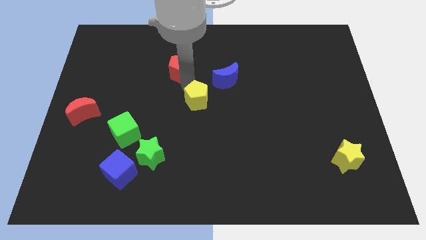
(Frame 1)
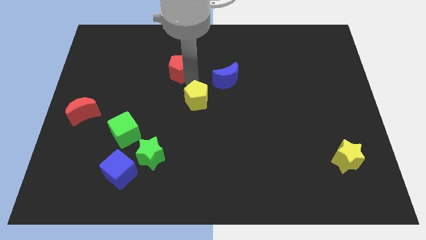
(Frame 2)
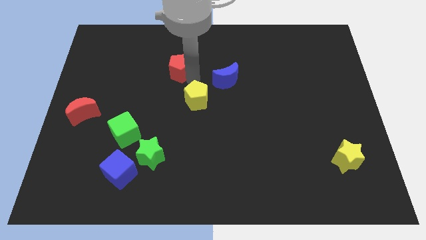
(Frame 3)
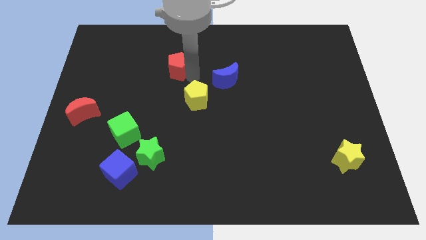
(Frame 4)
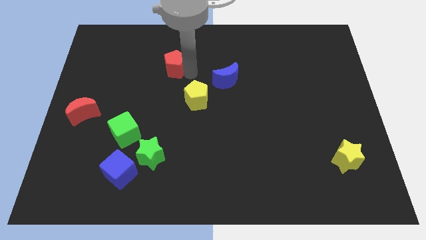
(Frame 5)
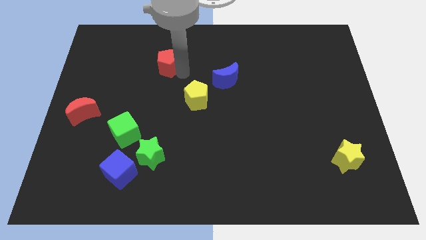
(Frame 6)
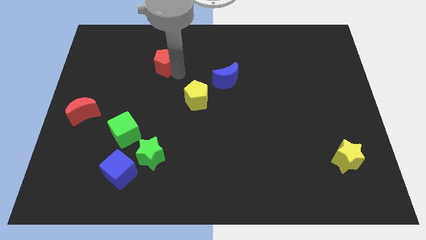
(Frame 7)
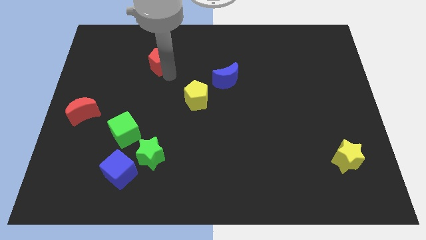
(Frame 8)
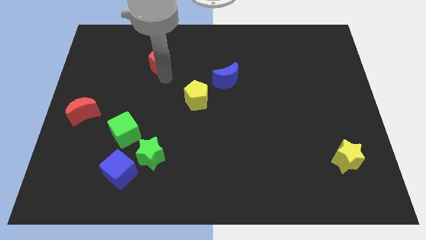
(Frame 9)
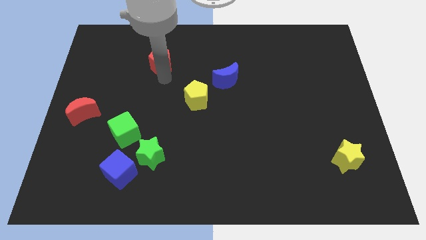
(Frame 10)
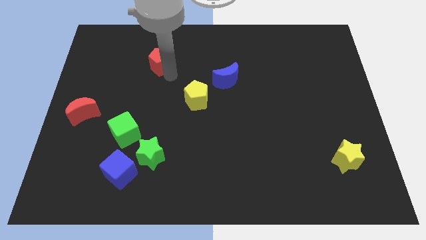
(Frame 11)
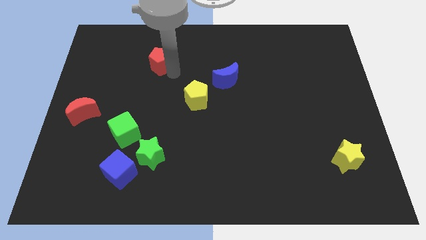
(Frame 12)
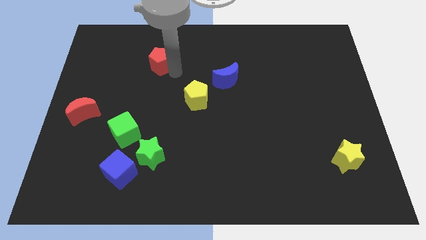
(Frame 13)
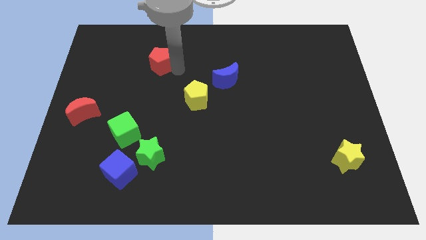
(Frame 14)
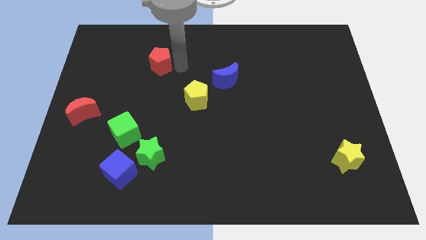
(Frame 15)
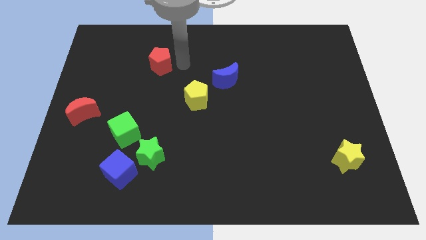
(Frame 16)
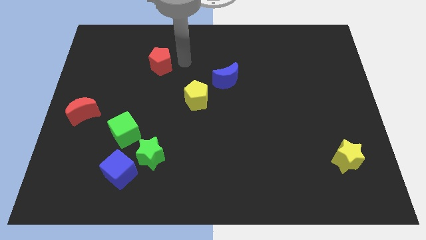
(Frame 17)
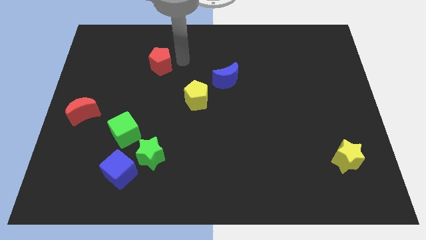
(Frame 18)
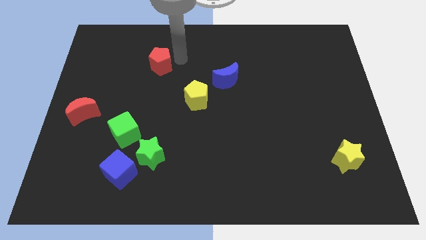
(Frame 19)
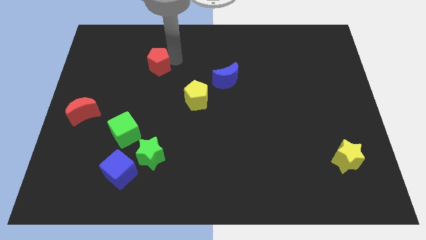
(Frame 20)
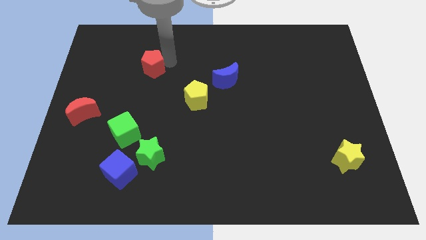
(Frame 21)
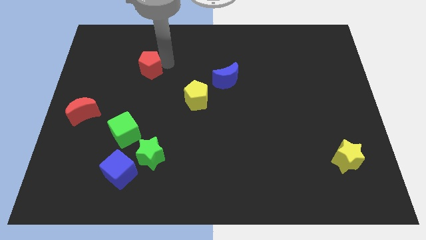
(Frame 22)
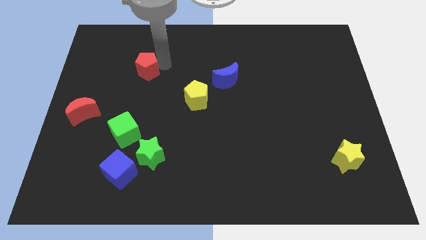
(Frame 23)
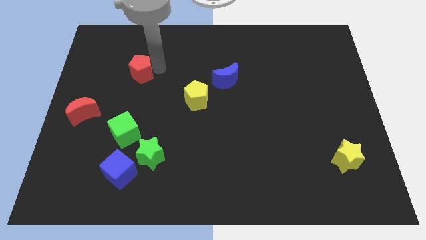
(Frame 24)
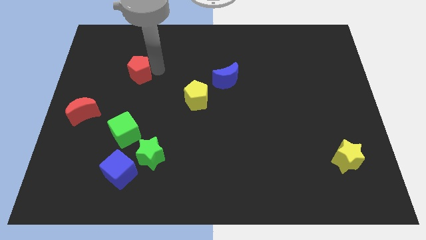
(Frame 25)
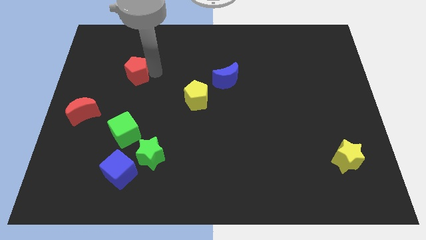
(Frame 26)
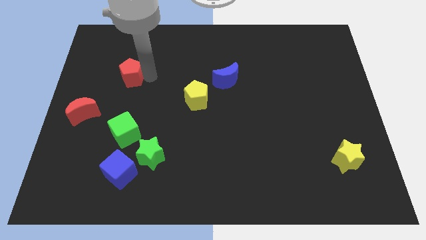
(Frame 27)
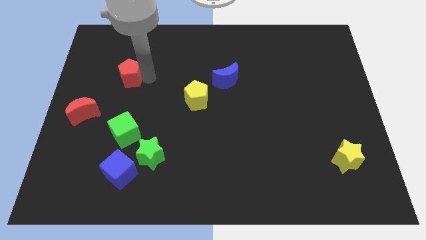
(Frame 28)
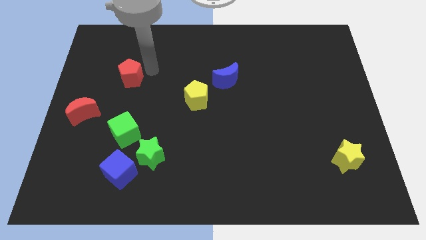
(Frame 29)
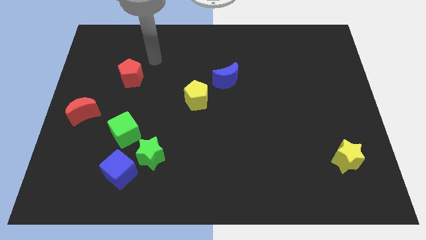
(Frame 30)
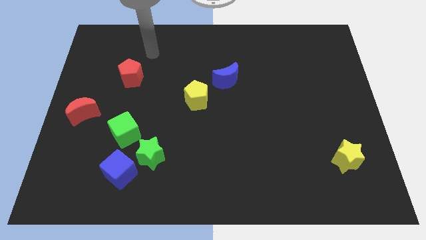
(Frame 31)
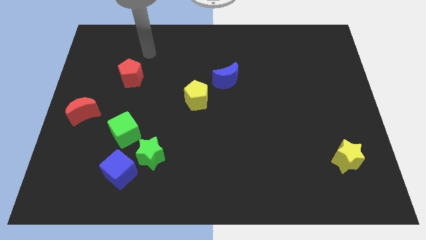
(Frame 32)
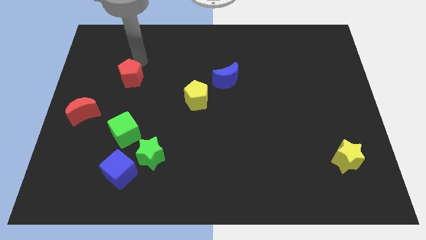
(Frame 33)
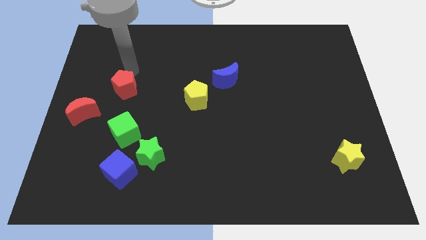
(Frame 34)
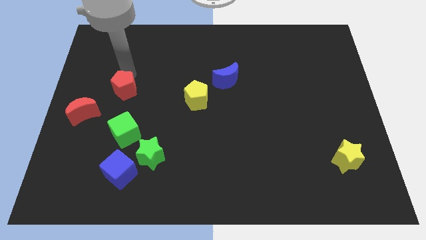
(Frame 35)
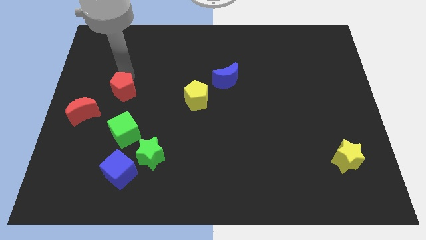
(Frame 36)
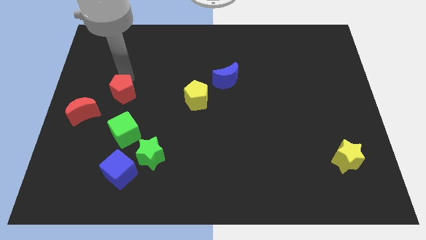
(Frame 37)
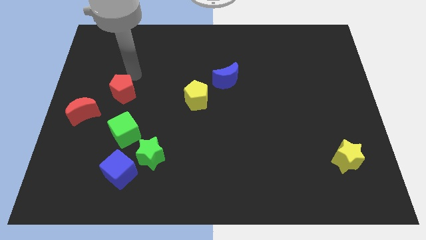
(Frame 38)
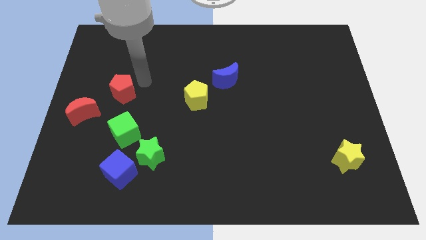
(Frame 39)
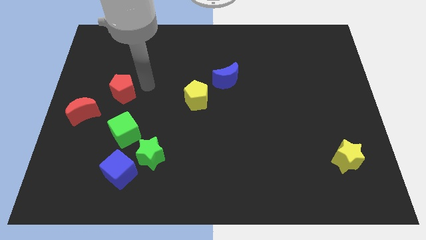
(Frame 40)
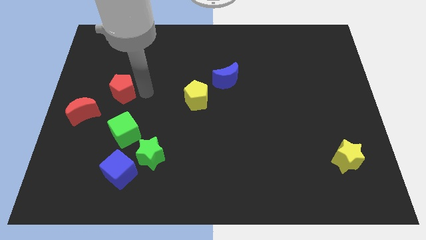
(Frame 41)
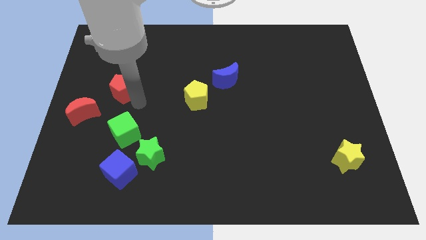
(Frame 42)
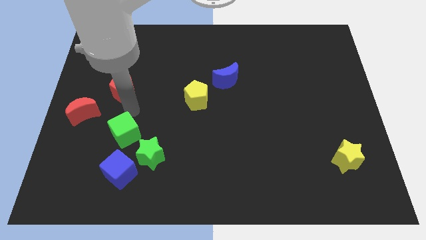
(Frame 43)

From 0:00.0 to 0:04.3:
put the red pentagon above the green cube

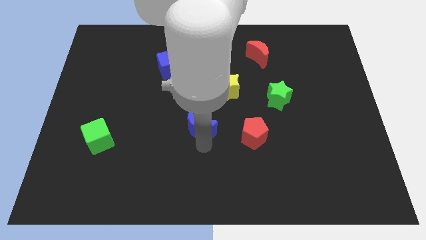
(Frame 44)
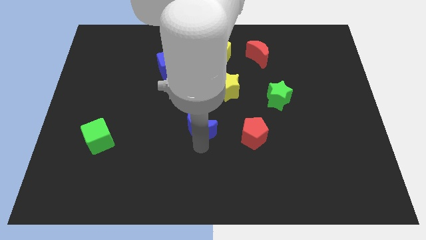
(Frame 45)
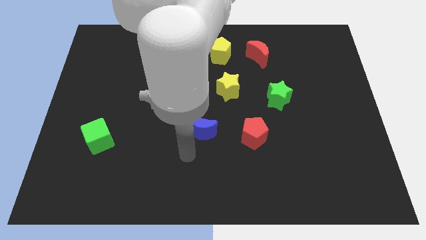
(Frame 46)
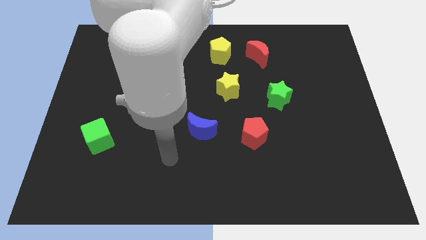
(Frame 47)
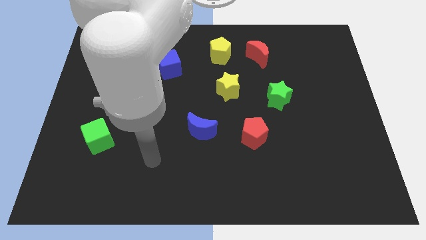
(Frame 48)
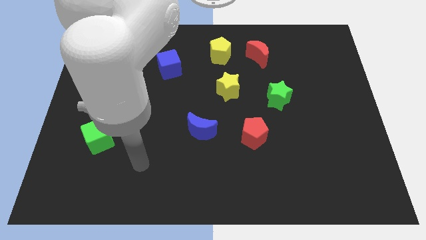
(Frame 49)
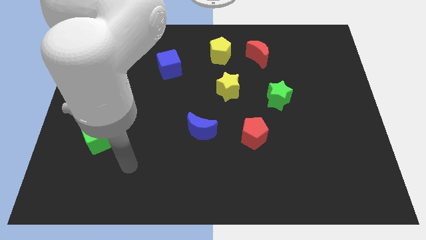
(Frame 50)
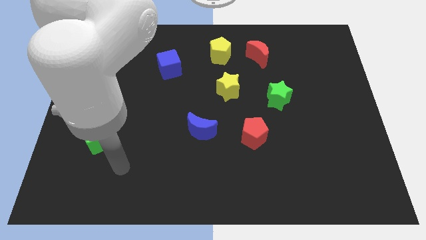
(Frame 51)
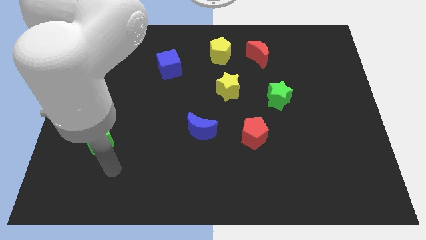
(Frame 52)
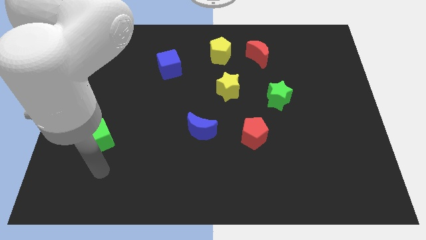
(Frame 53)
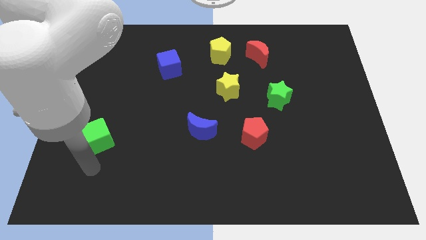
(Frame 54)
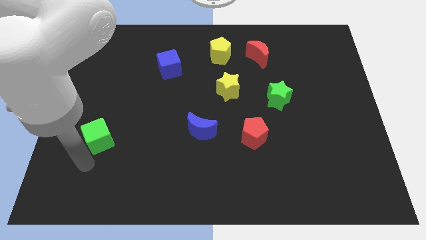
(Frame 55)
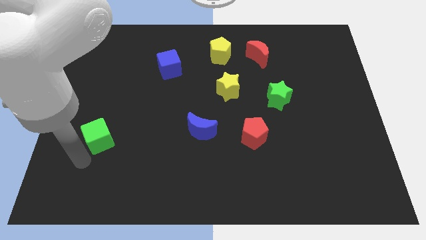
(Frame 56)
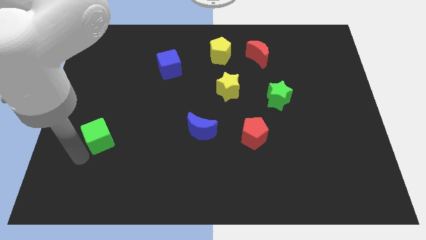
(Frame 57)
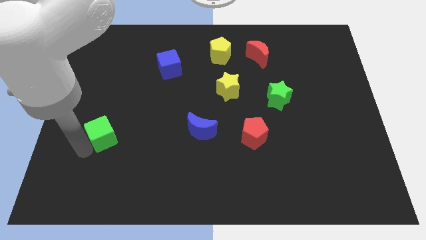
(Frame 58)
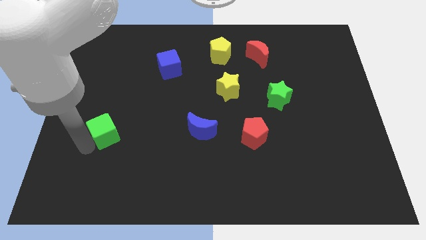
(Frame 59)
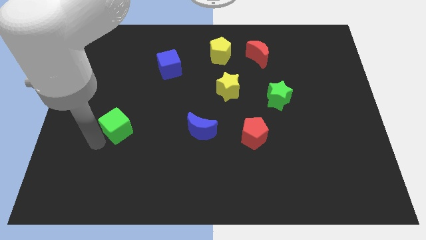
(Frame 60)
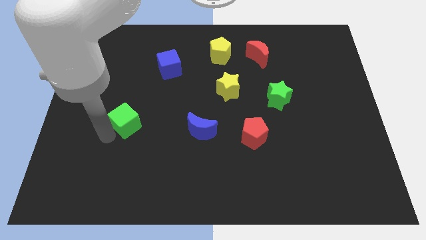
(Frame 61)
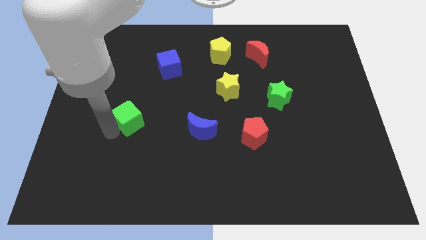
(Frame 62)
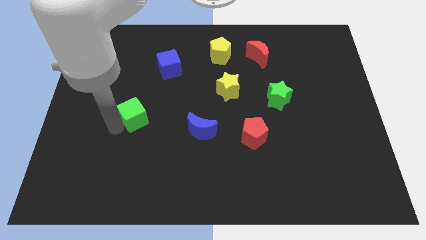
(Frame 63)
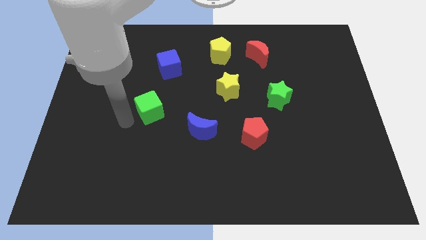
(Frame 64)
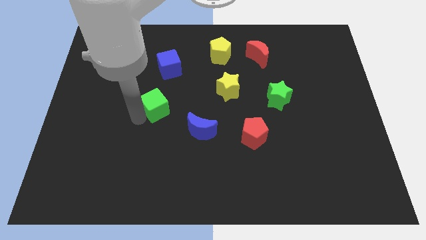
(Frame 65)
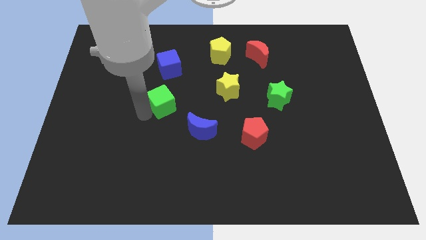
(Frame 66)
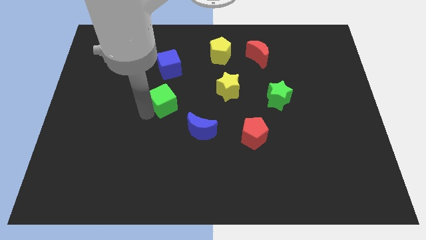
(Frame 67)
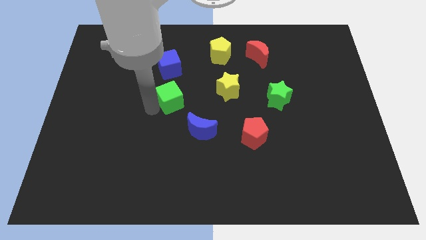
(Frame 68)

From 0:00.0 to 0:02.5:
move the green cube to the bottom of the blue cube

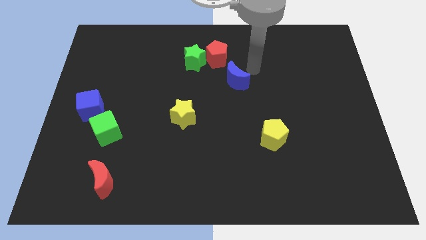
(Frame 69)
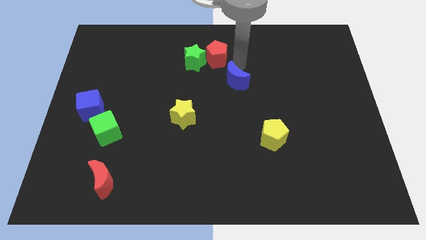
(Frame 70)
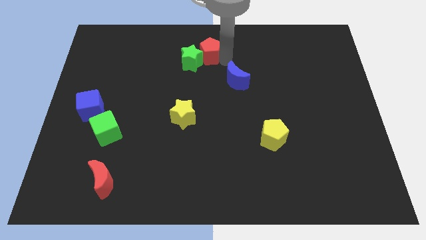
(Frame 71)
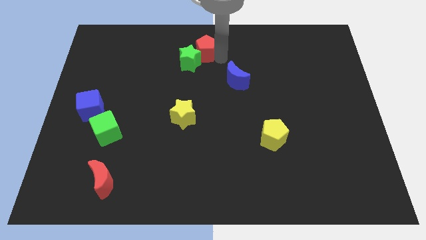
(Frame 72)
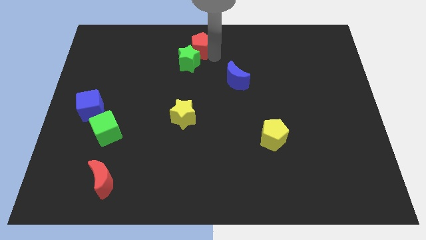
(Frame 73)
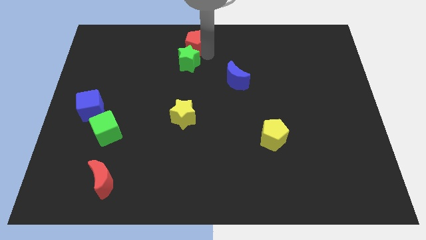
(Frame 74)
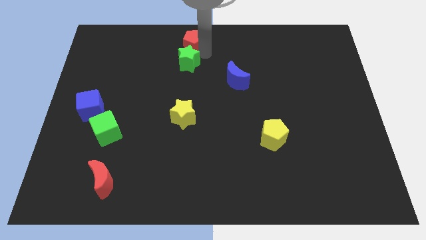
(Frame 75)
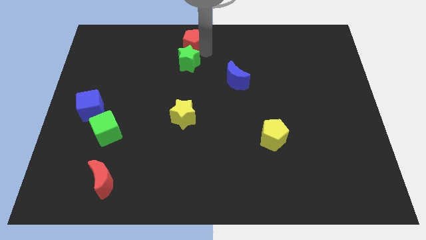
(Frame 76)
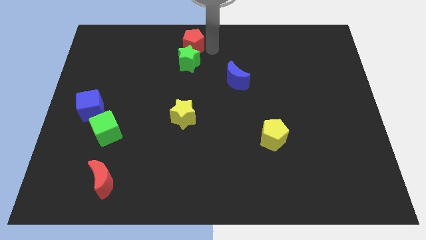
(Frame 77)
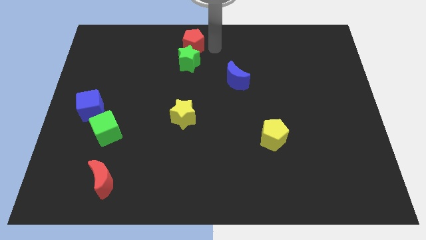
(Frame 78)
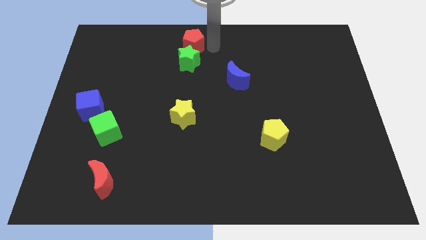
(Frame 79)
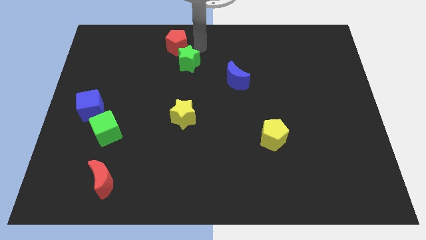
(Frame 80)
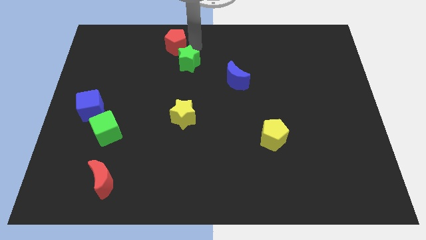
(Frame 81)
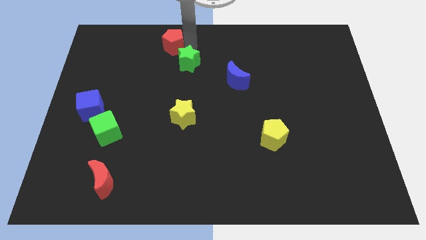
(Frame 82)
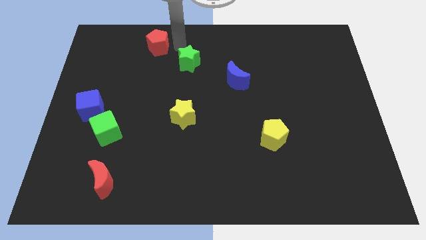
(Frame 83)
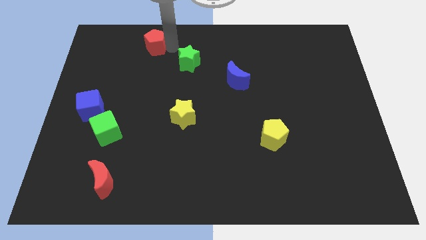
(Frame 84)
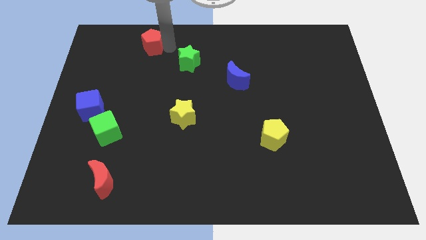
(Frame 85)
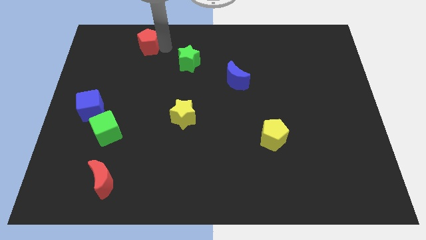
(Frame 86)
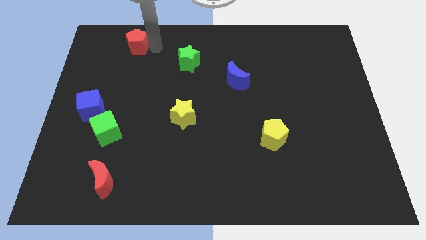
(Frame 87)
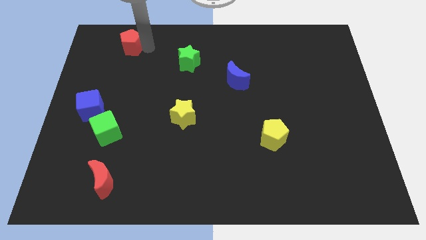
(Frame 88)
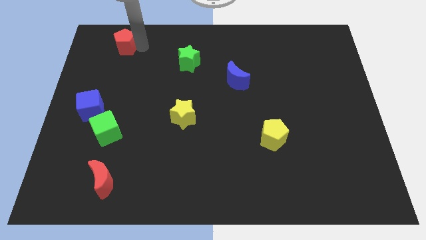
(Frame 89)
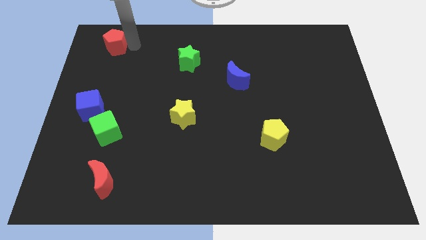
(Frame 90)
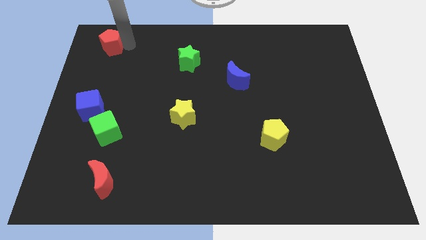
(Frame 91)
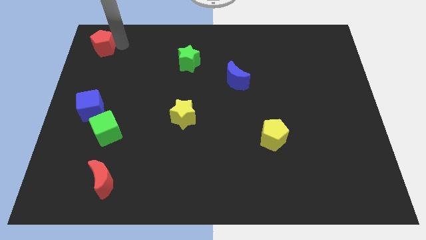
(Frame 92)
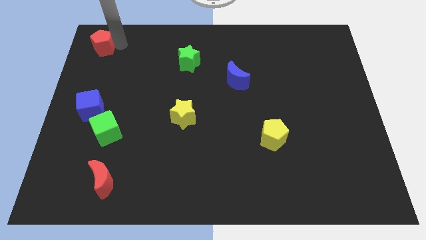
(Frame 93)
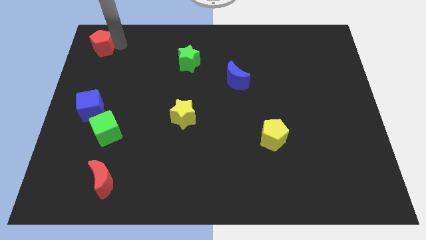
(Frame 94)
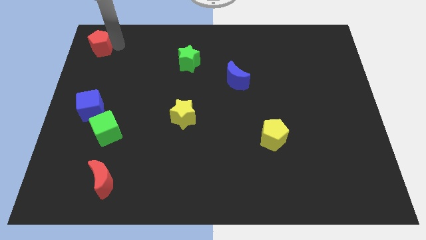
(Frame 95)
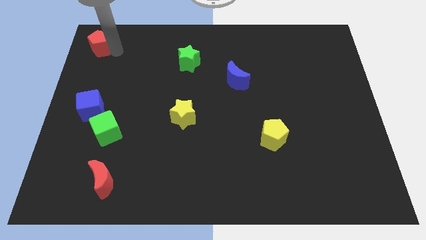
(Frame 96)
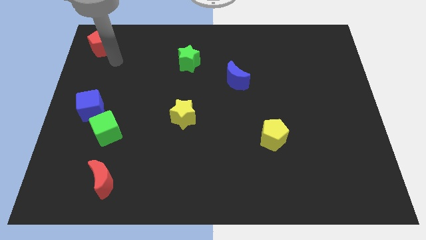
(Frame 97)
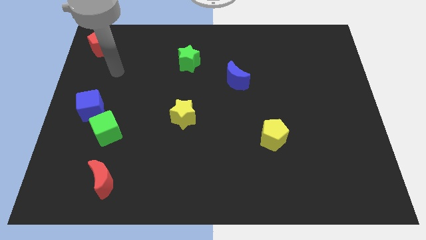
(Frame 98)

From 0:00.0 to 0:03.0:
push the red pentagon to the top left corner of the board
